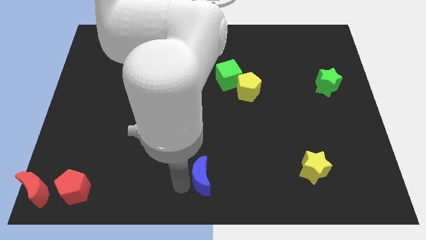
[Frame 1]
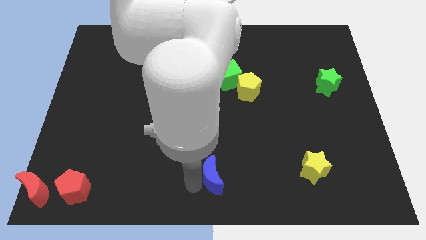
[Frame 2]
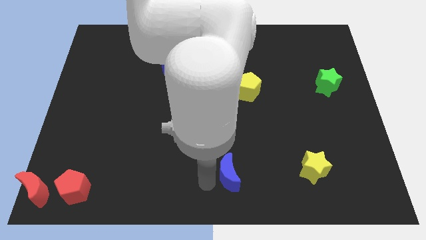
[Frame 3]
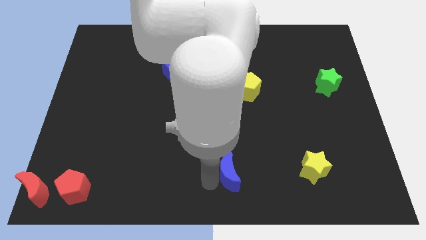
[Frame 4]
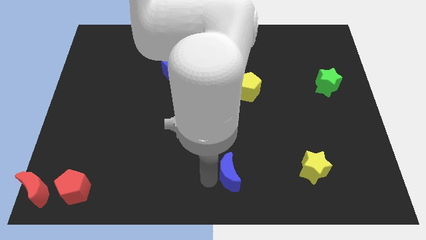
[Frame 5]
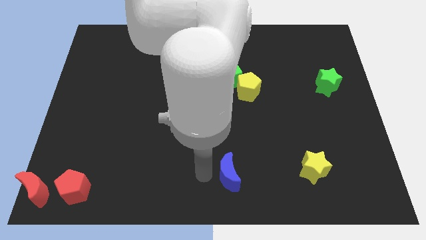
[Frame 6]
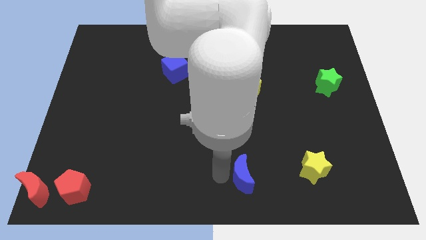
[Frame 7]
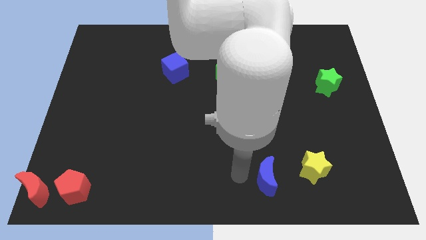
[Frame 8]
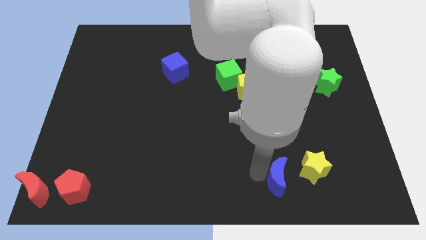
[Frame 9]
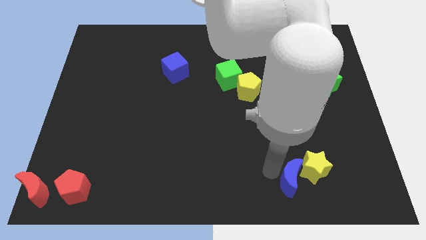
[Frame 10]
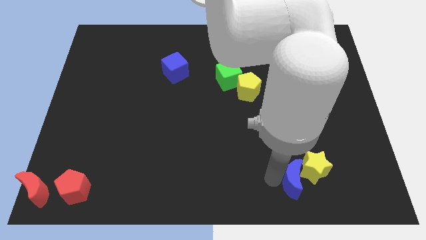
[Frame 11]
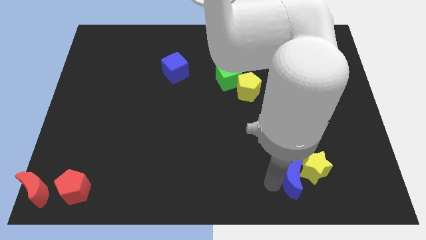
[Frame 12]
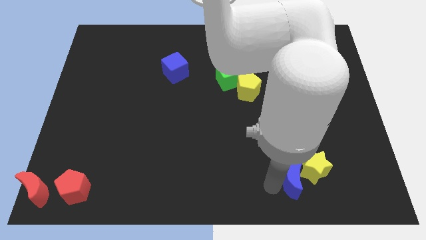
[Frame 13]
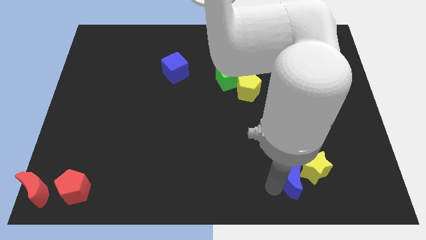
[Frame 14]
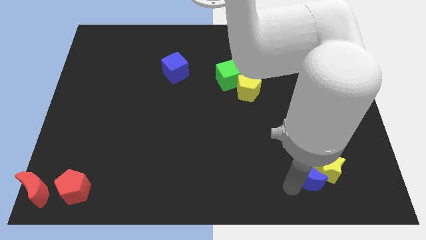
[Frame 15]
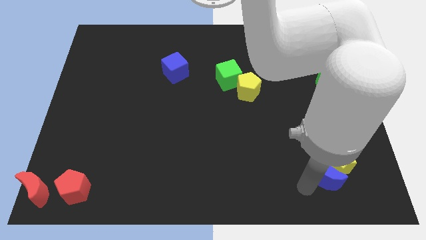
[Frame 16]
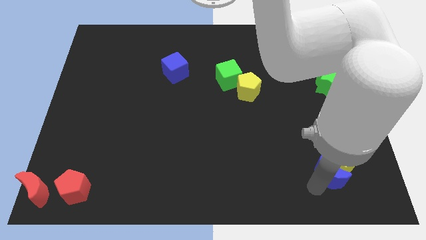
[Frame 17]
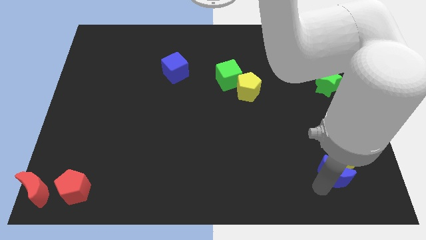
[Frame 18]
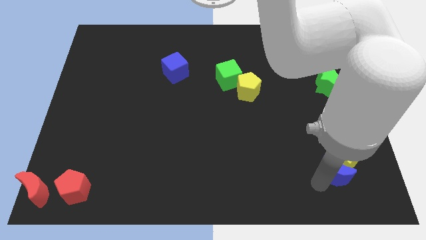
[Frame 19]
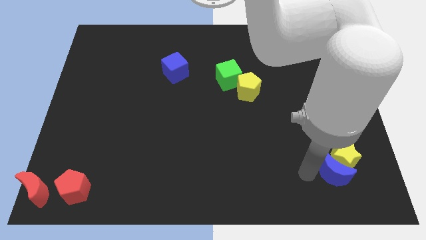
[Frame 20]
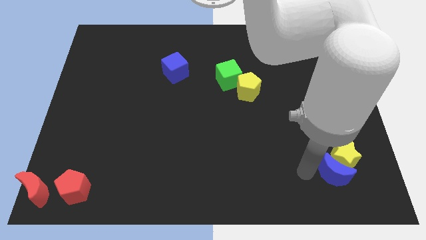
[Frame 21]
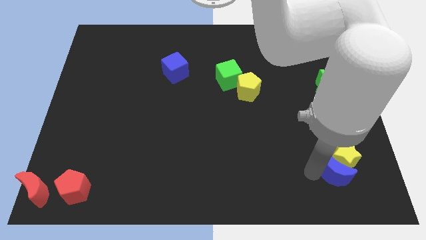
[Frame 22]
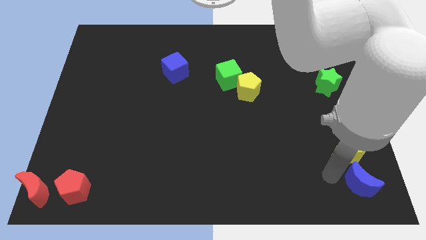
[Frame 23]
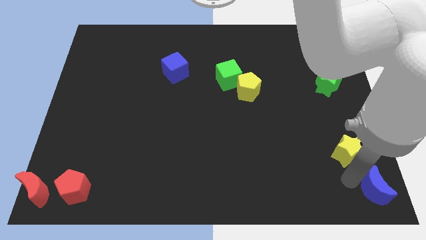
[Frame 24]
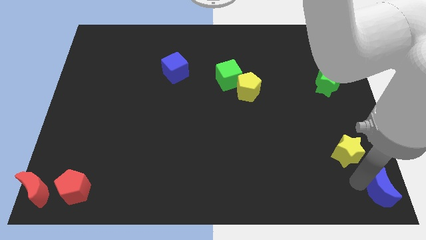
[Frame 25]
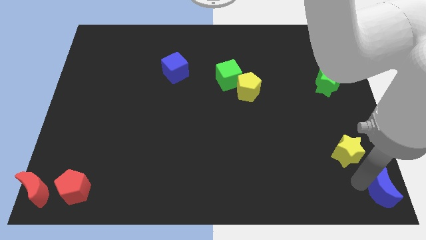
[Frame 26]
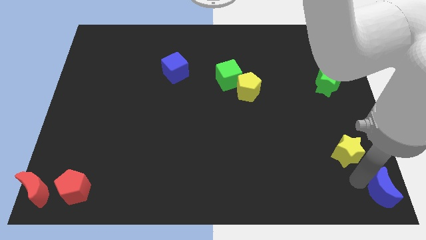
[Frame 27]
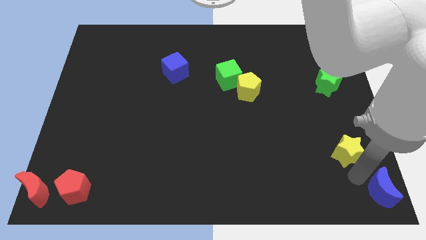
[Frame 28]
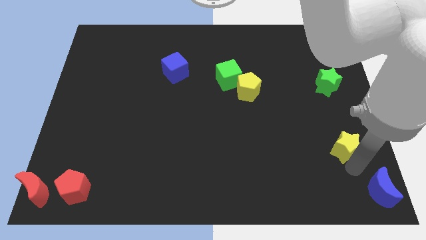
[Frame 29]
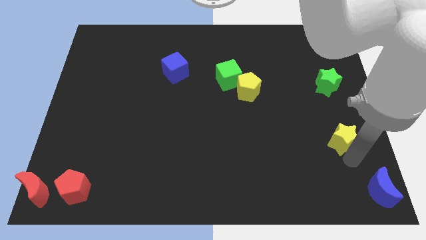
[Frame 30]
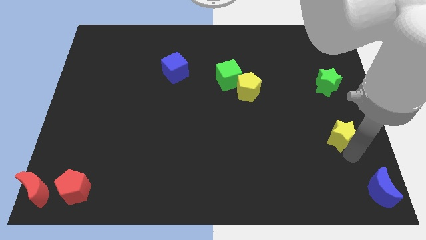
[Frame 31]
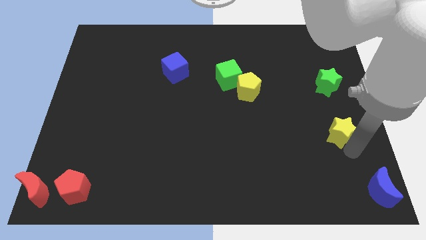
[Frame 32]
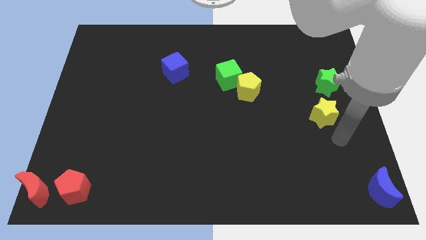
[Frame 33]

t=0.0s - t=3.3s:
push the blue moon at the bottom right of the board

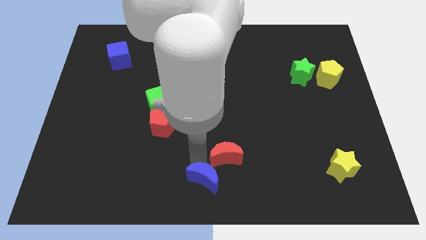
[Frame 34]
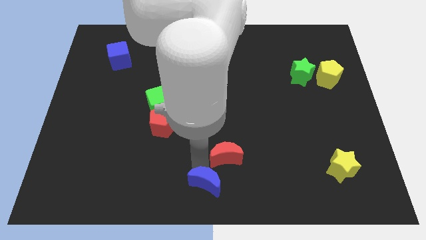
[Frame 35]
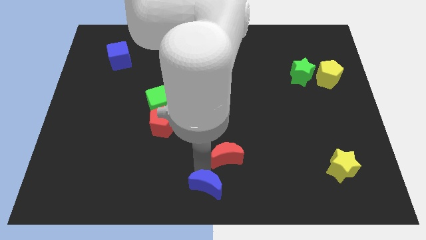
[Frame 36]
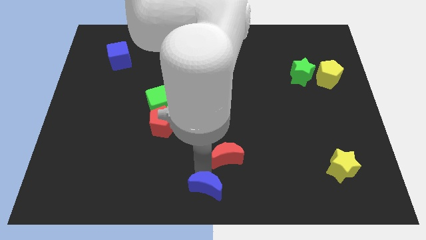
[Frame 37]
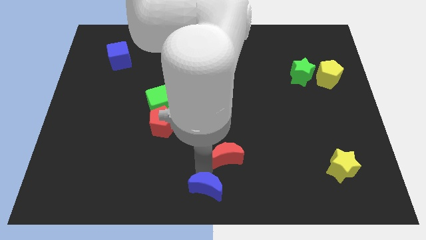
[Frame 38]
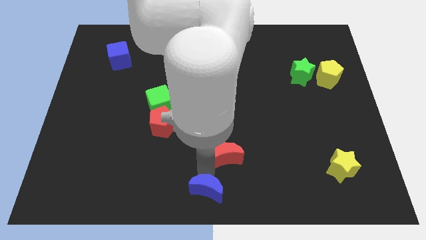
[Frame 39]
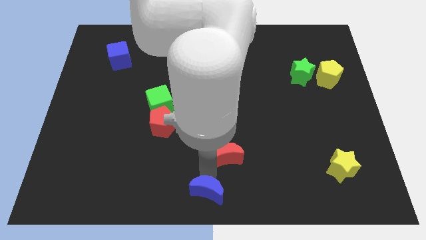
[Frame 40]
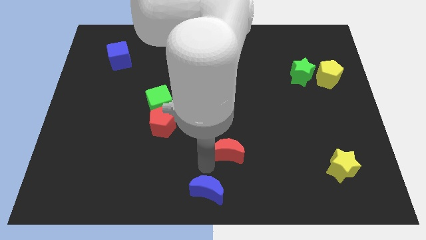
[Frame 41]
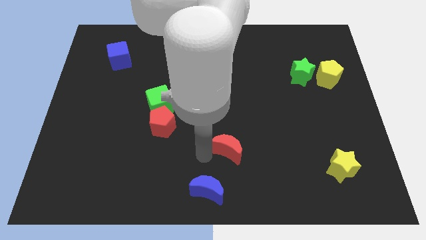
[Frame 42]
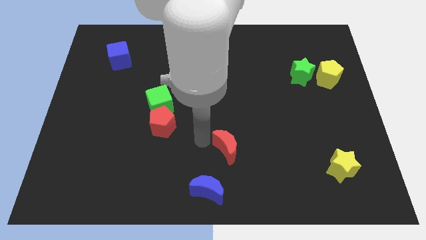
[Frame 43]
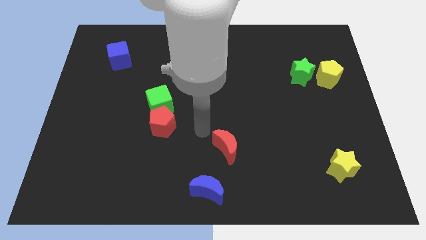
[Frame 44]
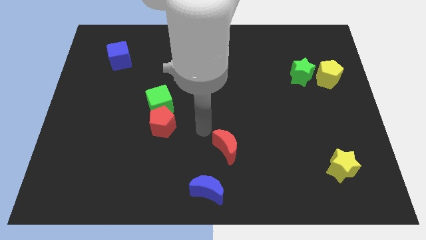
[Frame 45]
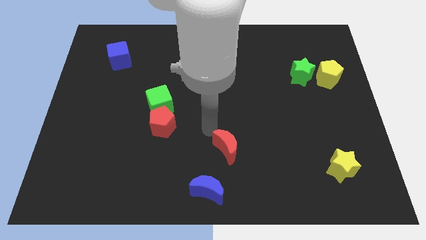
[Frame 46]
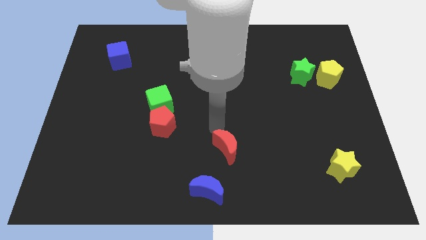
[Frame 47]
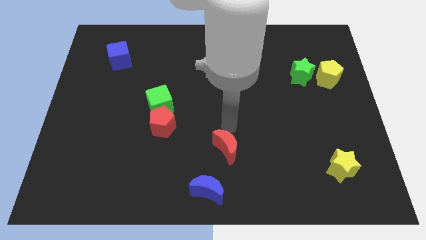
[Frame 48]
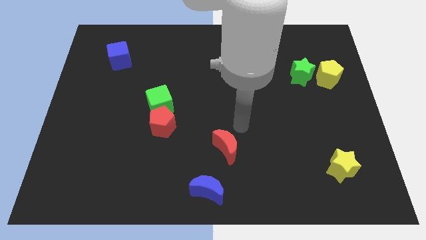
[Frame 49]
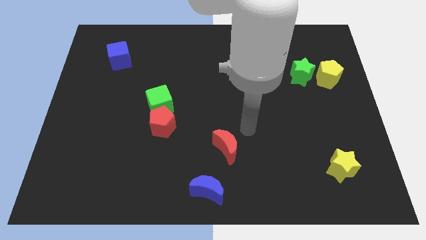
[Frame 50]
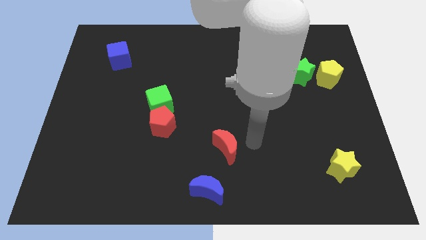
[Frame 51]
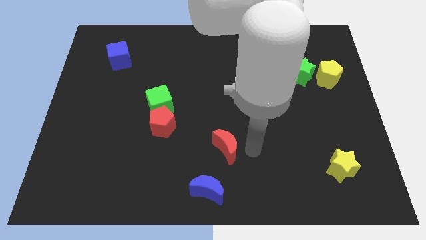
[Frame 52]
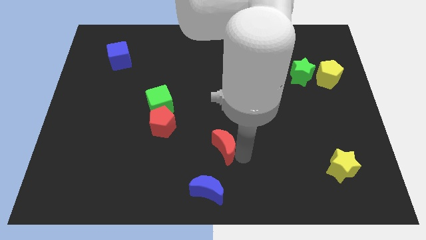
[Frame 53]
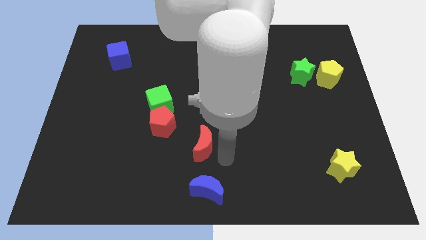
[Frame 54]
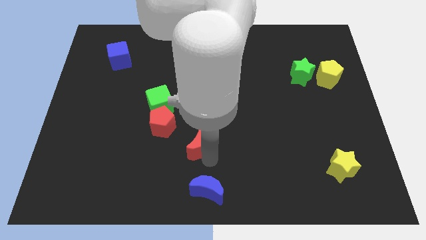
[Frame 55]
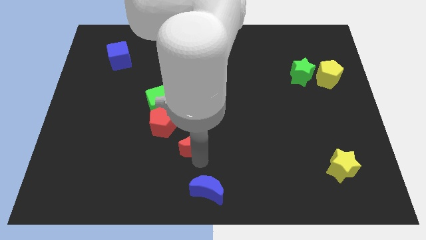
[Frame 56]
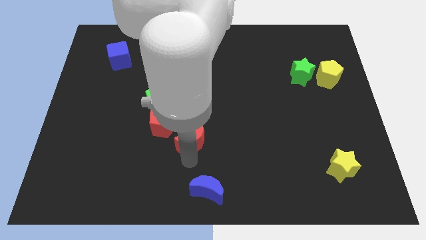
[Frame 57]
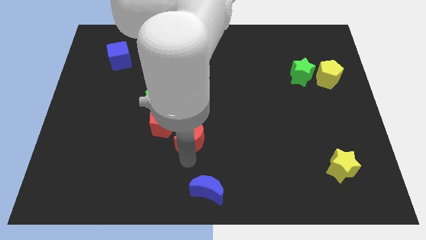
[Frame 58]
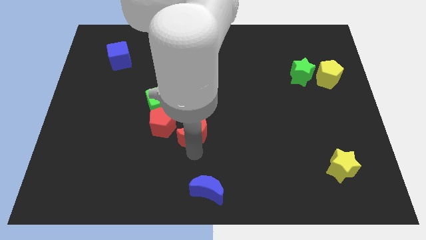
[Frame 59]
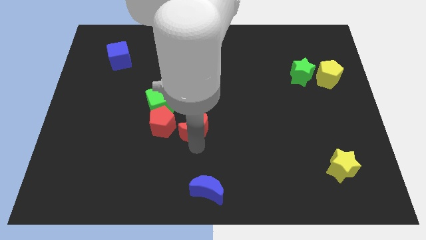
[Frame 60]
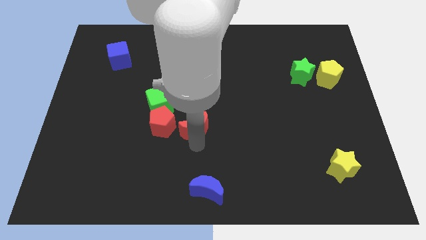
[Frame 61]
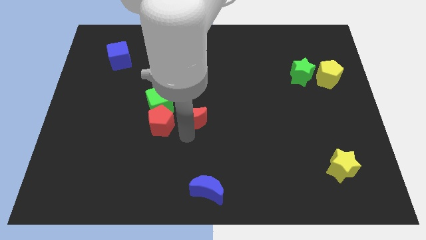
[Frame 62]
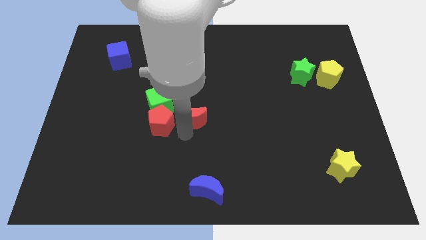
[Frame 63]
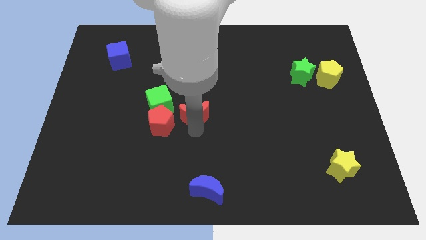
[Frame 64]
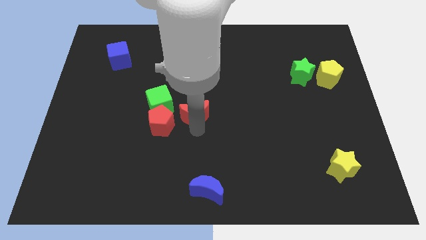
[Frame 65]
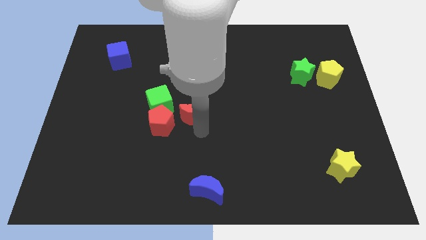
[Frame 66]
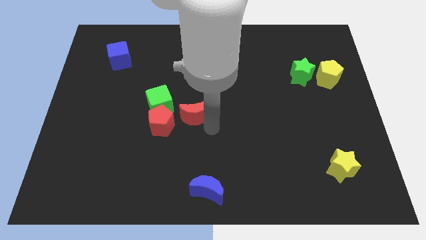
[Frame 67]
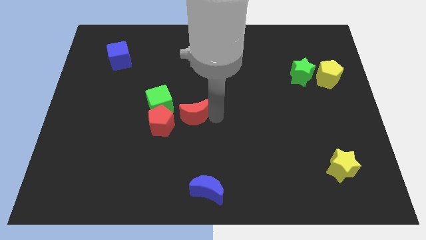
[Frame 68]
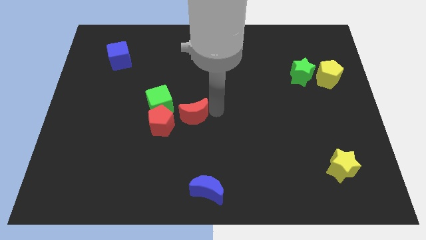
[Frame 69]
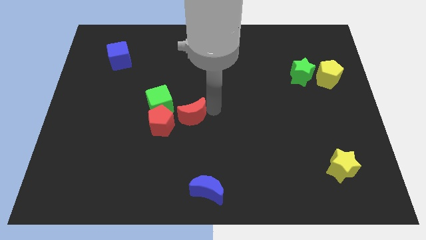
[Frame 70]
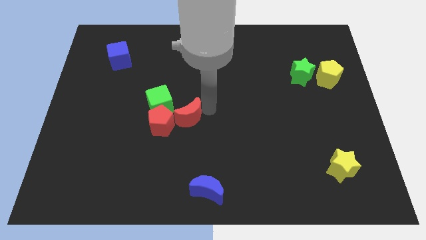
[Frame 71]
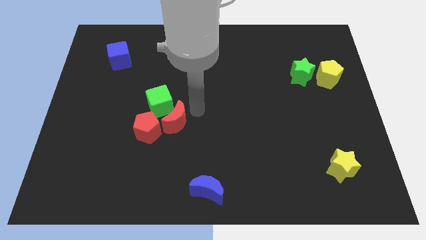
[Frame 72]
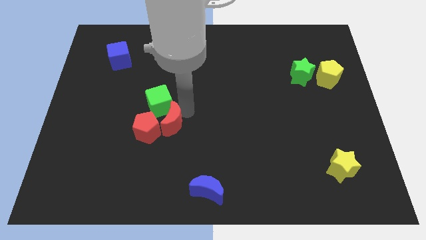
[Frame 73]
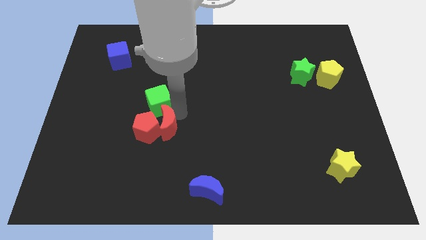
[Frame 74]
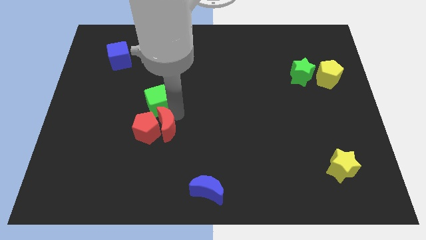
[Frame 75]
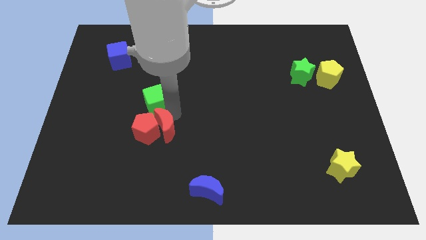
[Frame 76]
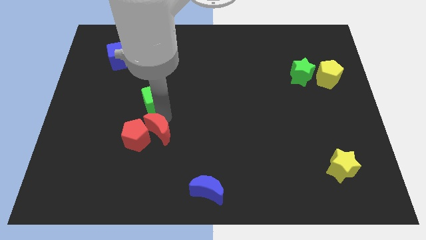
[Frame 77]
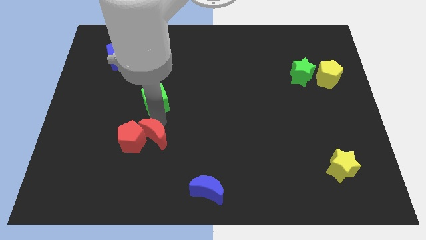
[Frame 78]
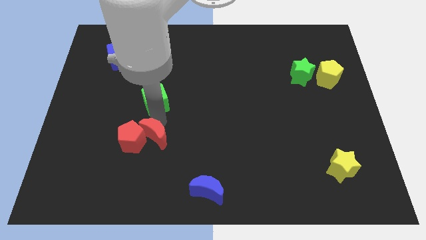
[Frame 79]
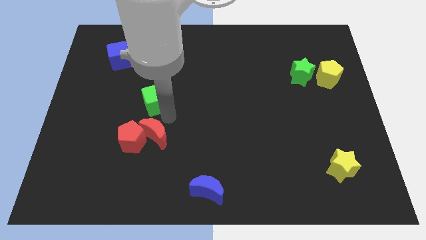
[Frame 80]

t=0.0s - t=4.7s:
place red crescent into red pentagon

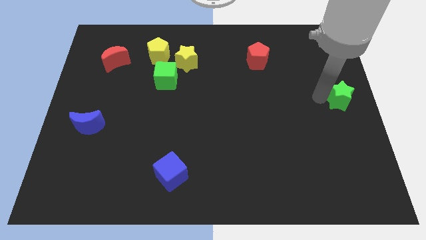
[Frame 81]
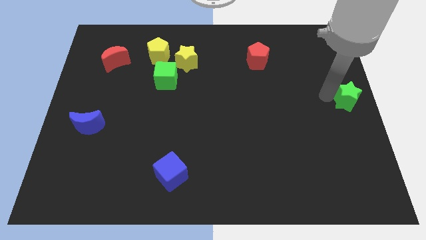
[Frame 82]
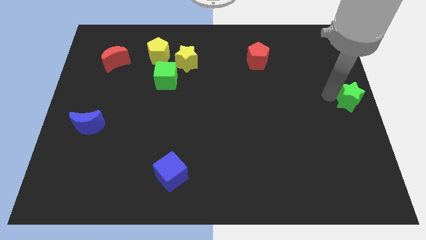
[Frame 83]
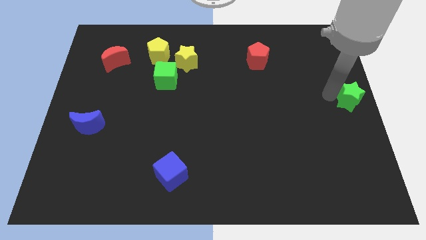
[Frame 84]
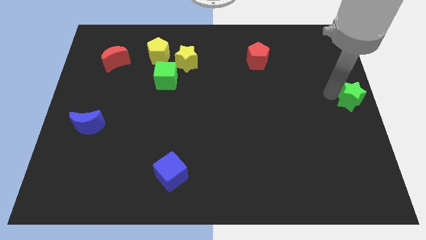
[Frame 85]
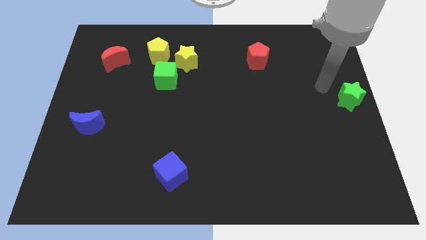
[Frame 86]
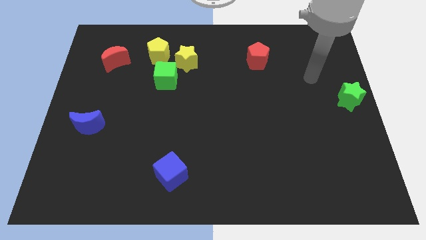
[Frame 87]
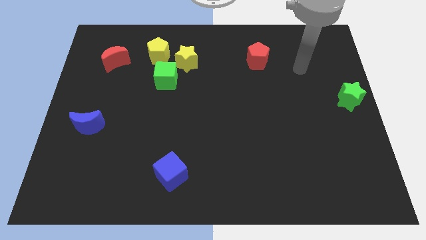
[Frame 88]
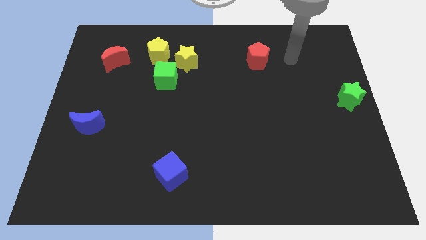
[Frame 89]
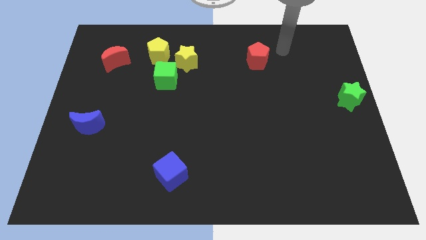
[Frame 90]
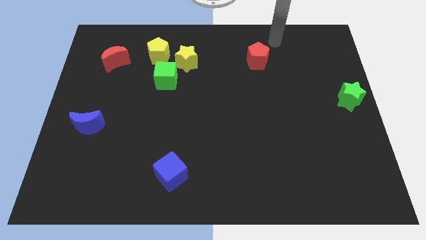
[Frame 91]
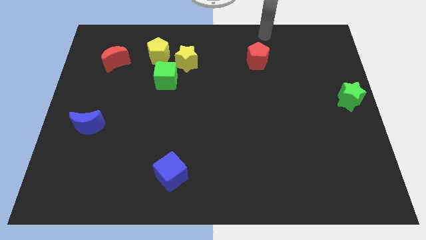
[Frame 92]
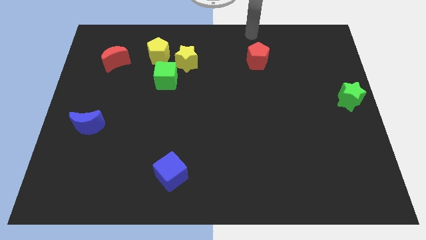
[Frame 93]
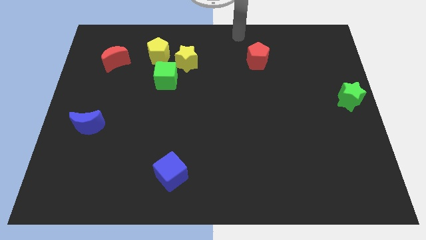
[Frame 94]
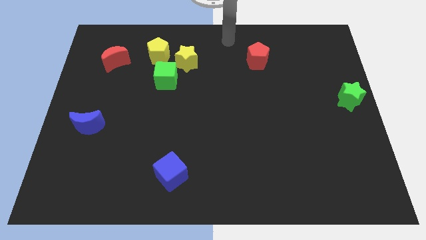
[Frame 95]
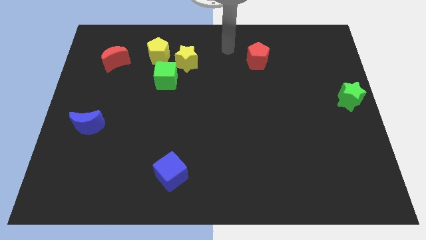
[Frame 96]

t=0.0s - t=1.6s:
place the green star at the right center of the board
